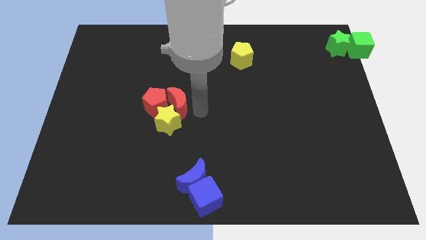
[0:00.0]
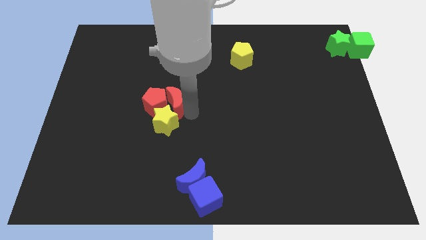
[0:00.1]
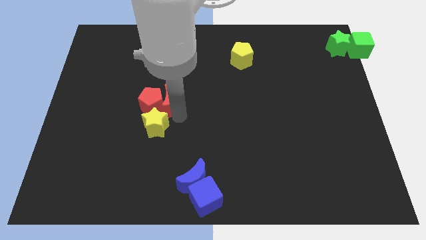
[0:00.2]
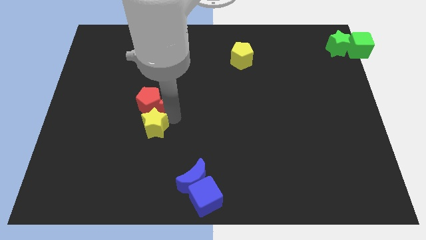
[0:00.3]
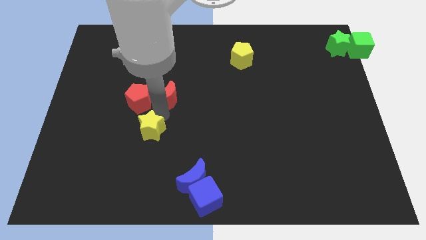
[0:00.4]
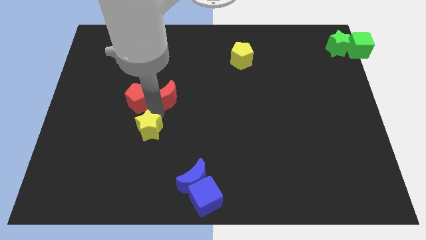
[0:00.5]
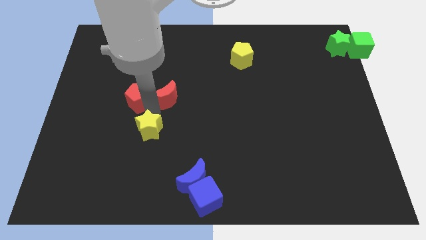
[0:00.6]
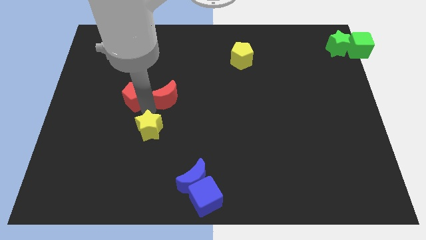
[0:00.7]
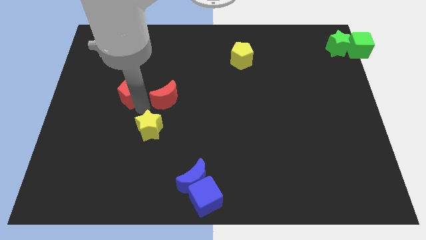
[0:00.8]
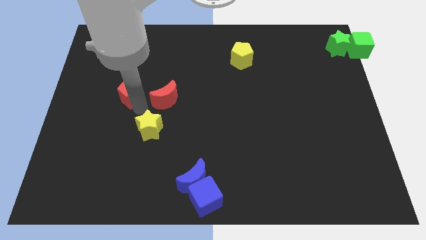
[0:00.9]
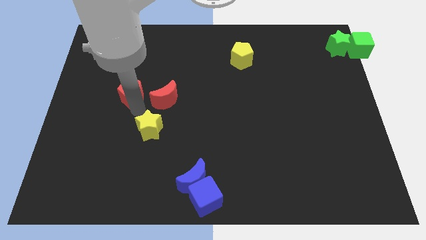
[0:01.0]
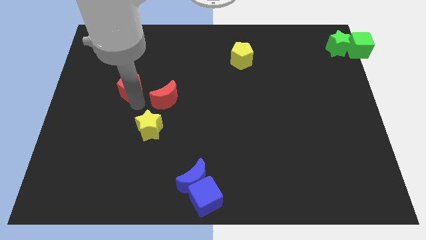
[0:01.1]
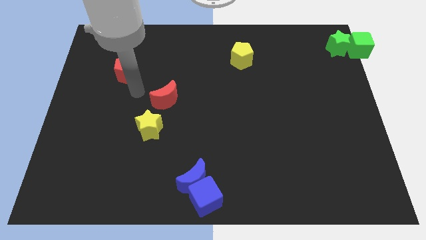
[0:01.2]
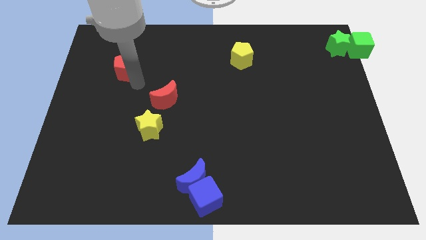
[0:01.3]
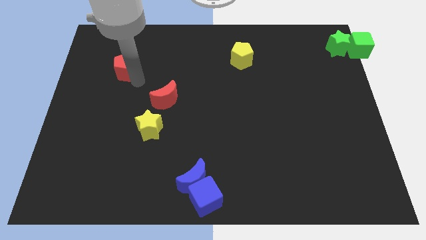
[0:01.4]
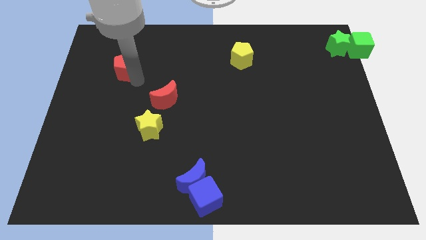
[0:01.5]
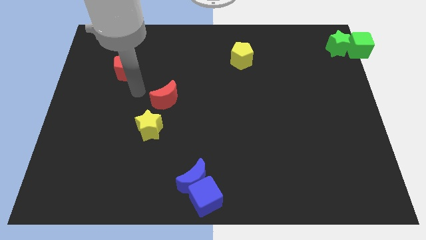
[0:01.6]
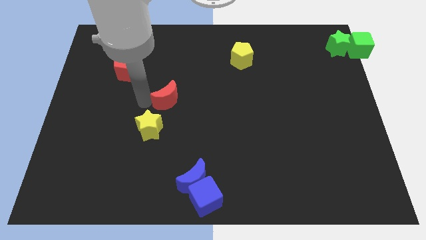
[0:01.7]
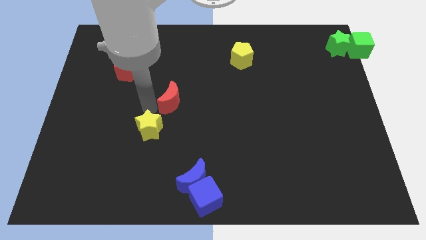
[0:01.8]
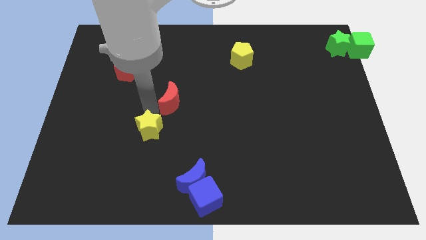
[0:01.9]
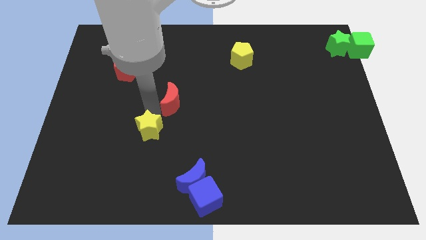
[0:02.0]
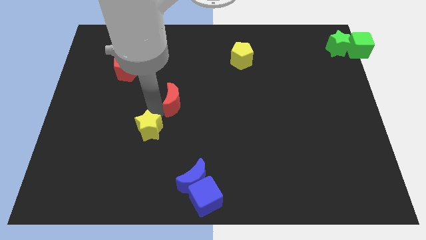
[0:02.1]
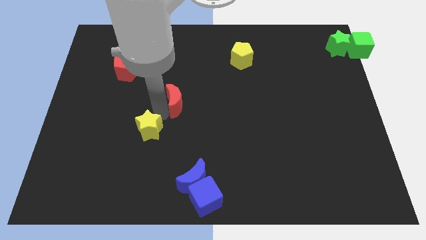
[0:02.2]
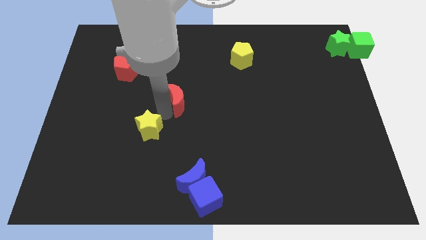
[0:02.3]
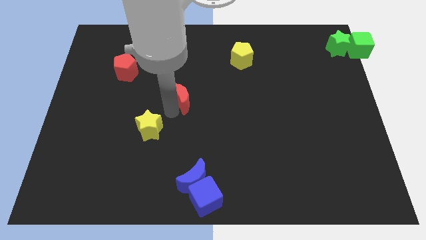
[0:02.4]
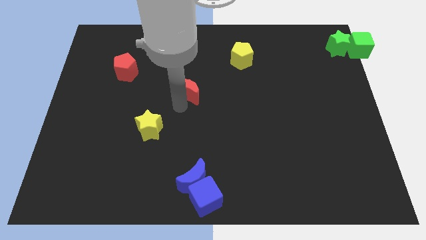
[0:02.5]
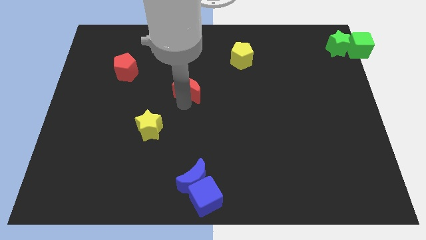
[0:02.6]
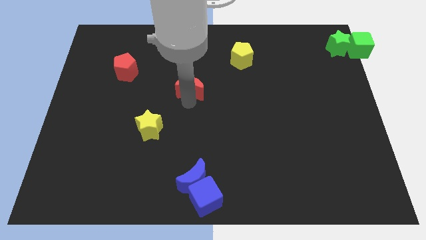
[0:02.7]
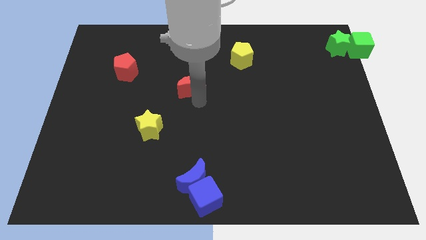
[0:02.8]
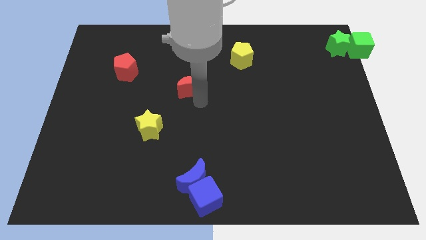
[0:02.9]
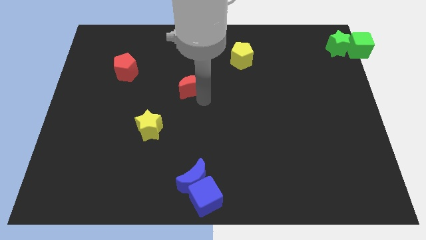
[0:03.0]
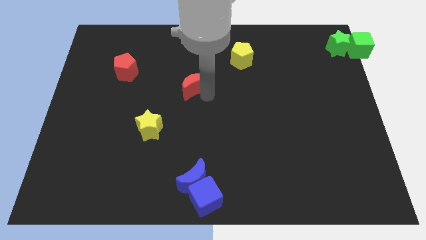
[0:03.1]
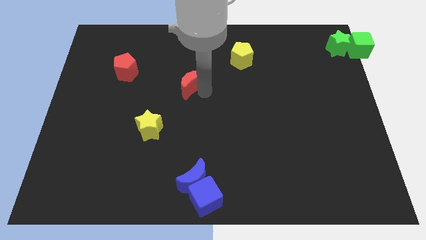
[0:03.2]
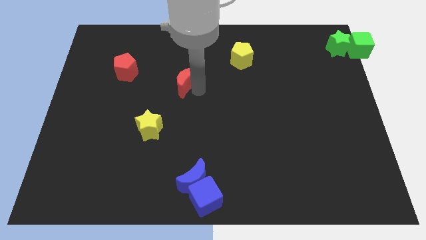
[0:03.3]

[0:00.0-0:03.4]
separate the red pentagon from the red moon

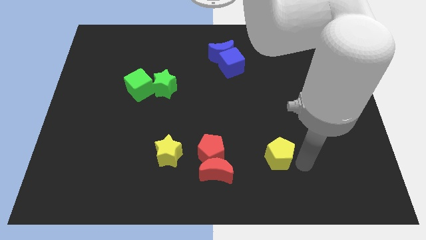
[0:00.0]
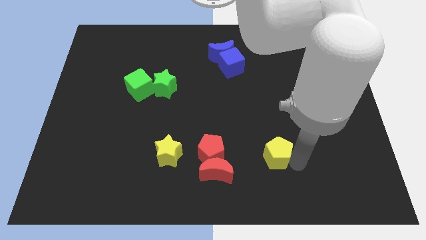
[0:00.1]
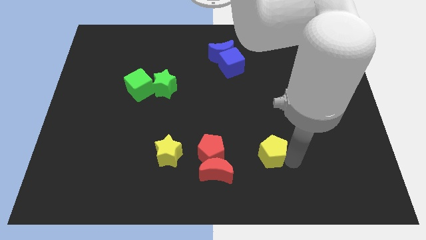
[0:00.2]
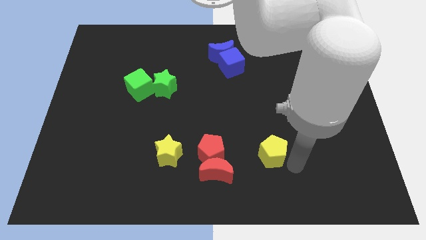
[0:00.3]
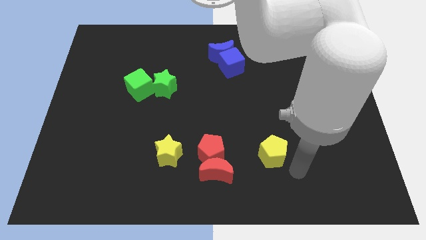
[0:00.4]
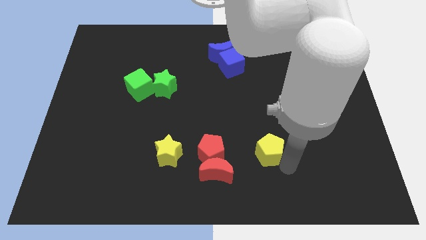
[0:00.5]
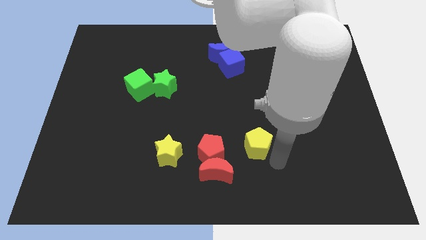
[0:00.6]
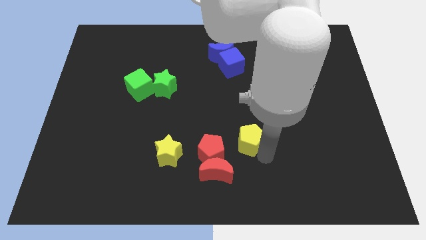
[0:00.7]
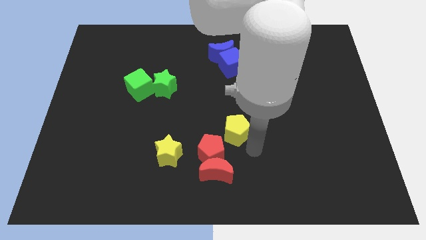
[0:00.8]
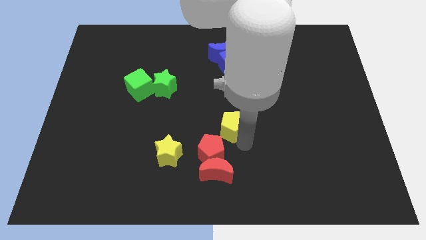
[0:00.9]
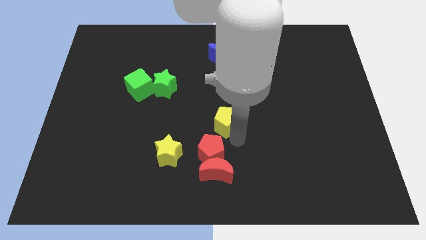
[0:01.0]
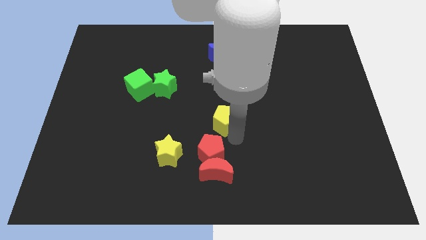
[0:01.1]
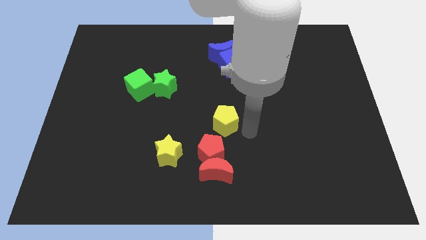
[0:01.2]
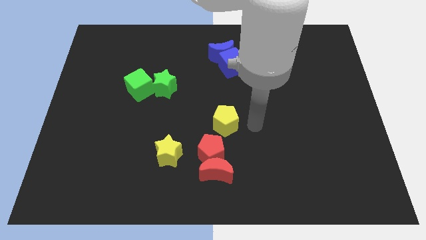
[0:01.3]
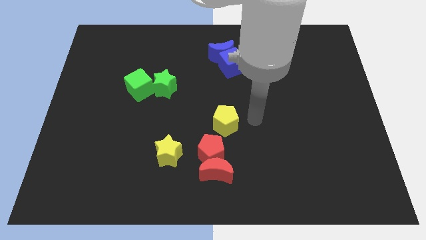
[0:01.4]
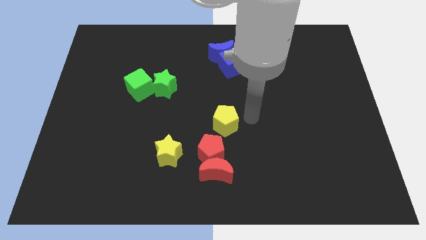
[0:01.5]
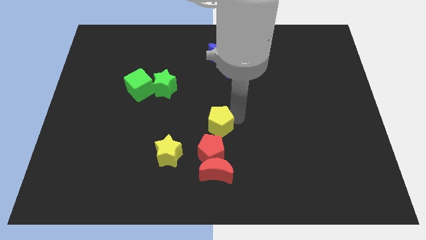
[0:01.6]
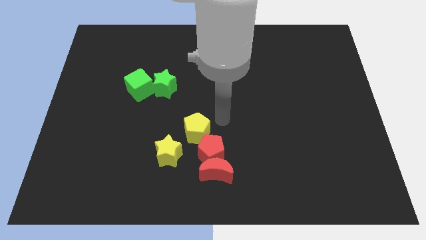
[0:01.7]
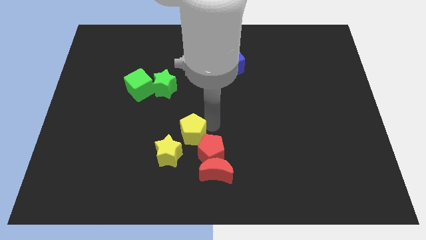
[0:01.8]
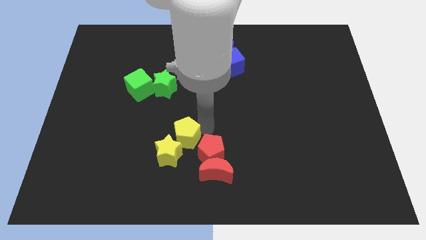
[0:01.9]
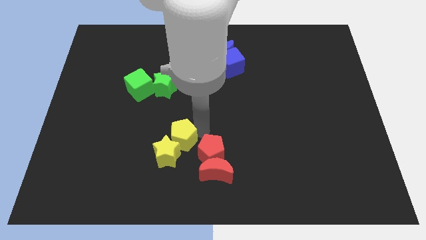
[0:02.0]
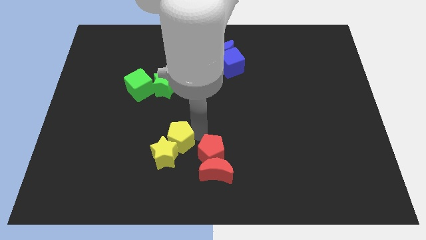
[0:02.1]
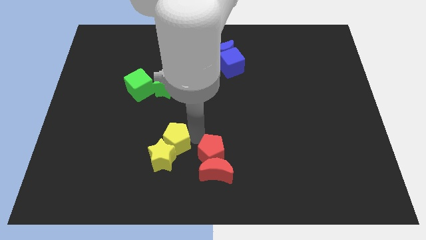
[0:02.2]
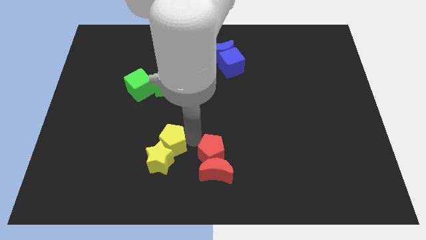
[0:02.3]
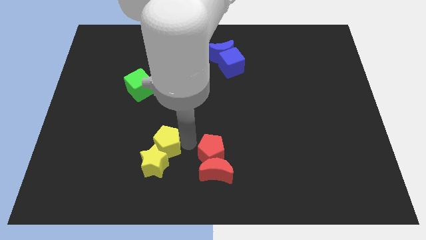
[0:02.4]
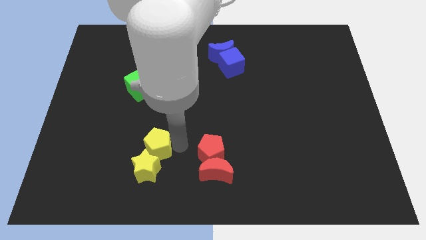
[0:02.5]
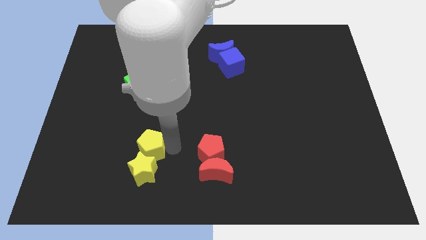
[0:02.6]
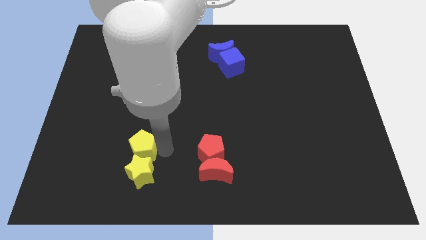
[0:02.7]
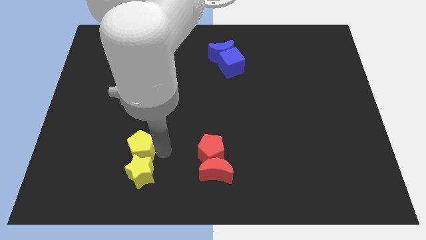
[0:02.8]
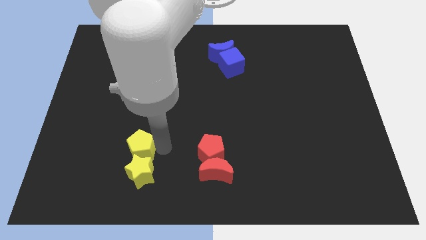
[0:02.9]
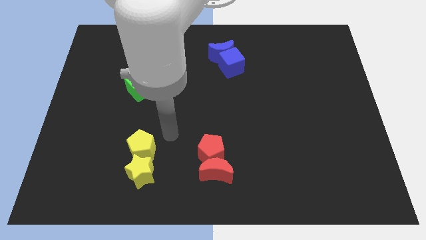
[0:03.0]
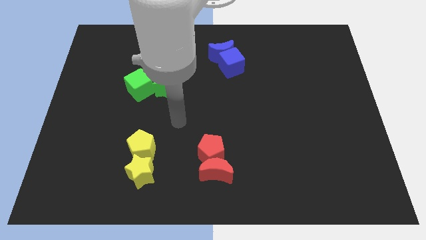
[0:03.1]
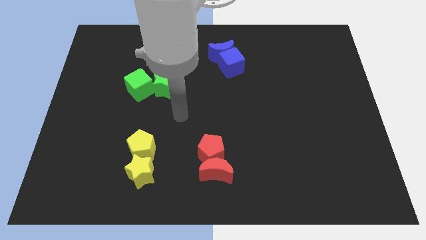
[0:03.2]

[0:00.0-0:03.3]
slide the yellow pentagon into the yellow star

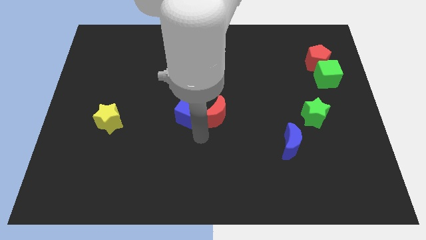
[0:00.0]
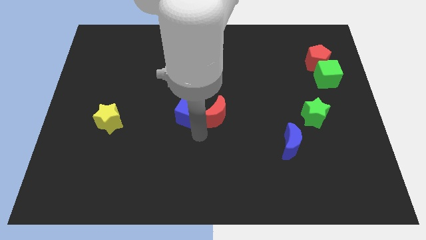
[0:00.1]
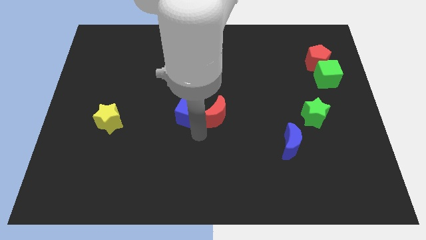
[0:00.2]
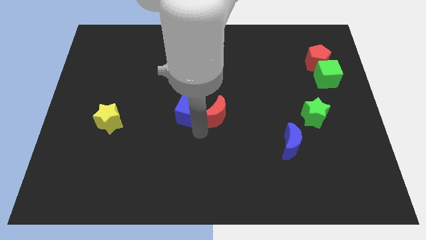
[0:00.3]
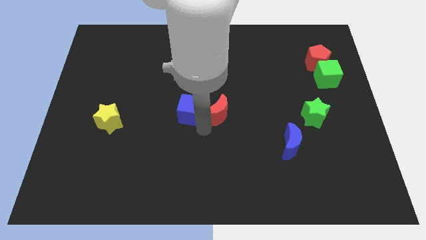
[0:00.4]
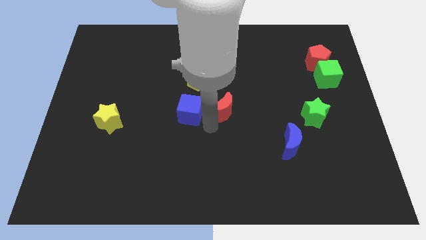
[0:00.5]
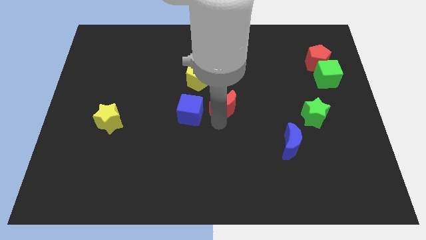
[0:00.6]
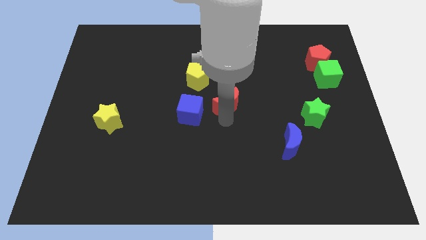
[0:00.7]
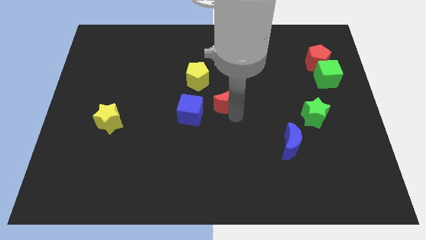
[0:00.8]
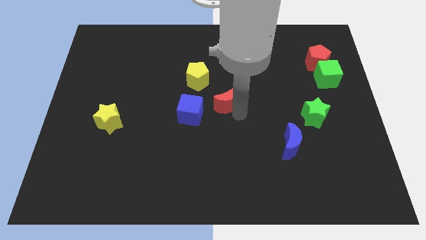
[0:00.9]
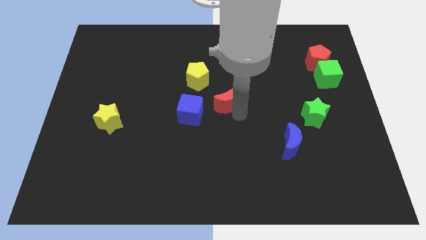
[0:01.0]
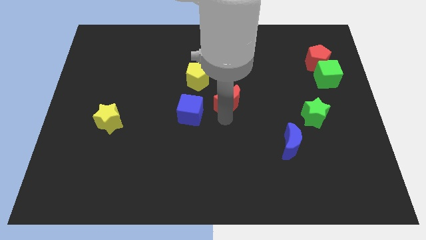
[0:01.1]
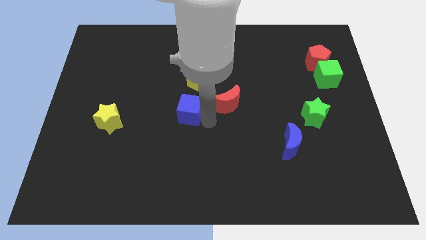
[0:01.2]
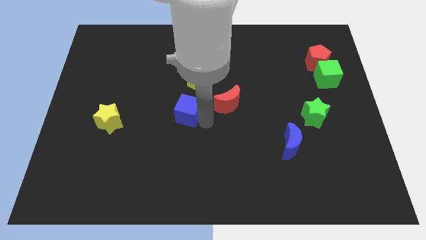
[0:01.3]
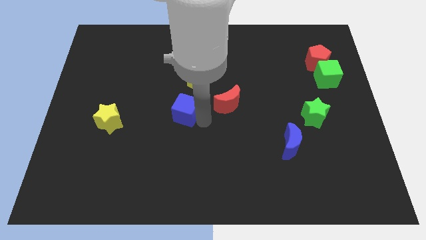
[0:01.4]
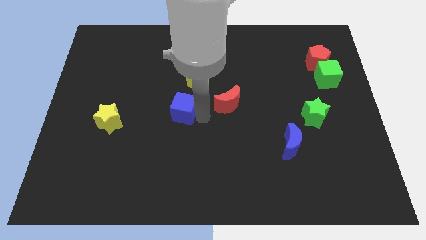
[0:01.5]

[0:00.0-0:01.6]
separate the red crescent and the blue cube

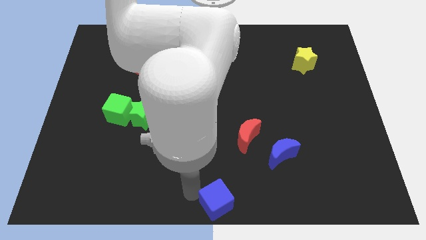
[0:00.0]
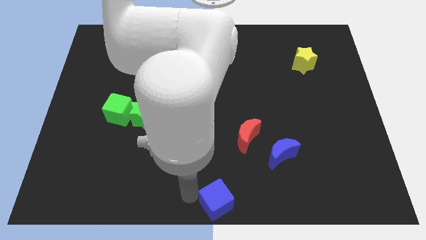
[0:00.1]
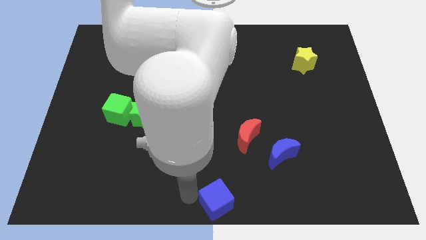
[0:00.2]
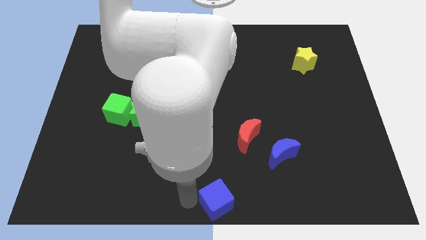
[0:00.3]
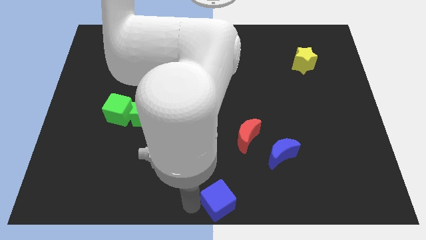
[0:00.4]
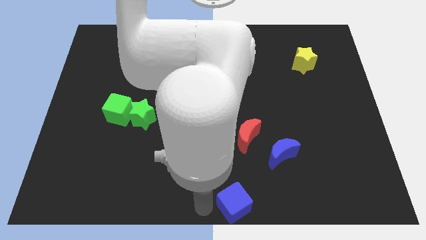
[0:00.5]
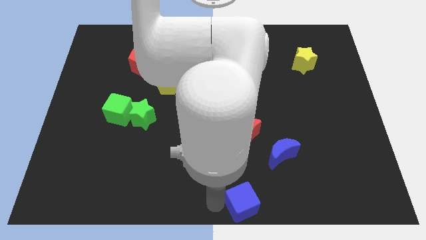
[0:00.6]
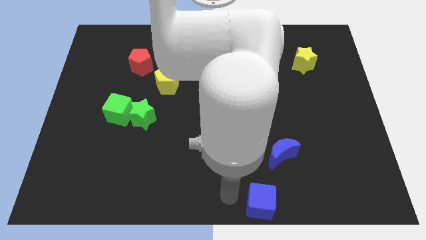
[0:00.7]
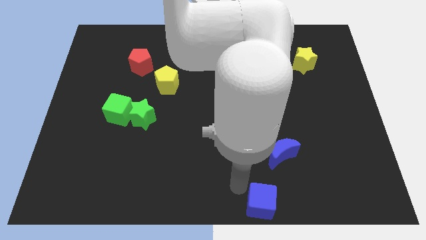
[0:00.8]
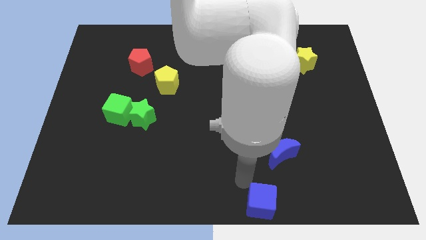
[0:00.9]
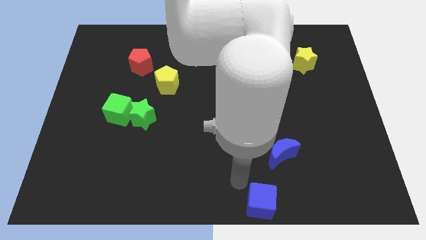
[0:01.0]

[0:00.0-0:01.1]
move the blue cube towards the right
